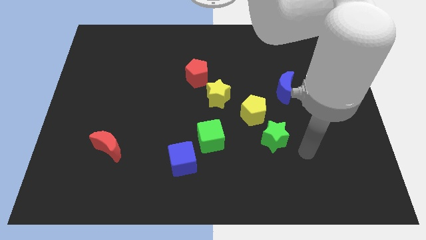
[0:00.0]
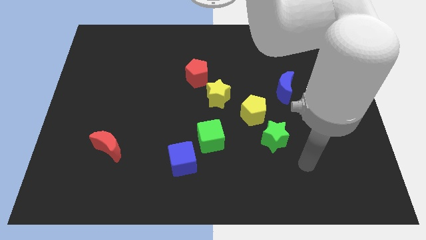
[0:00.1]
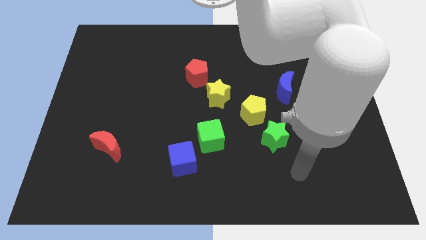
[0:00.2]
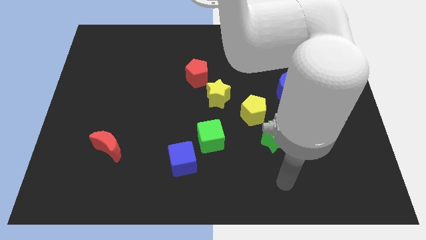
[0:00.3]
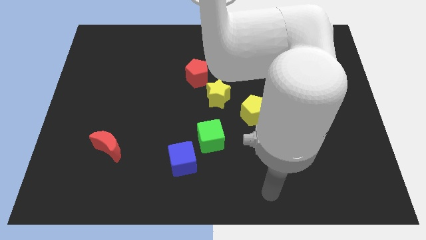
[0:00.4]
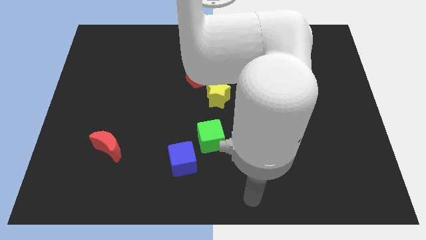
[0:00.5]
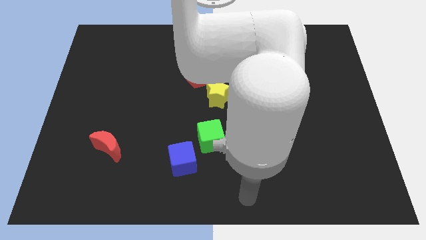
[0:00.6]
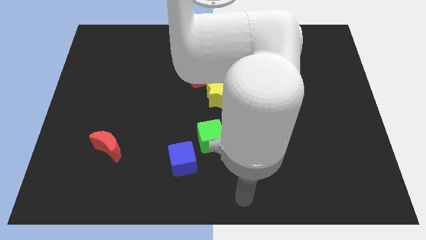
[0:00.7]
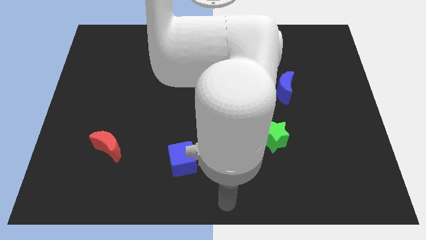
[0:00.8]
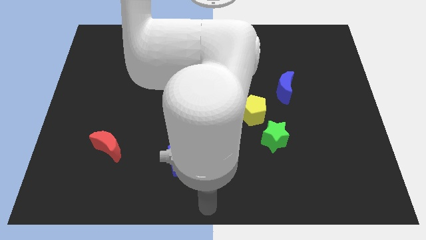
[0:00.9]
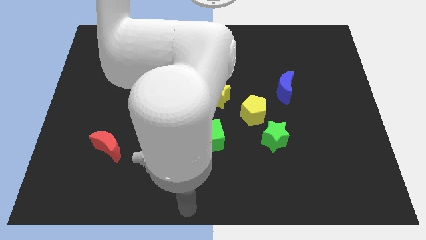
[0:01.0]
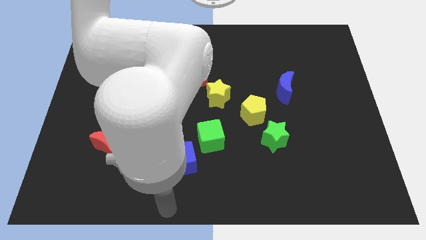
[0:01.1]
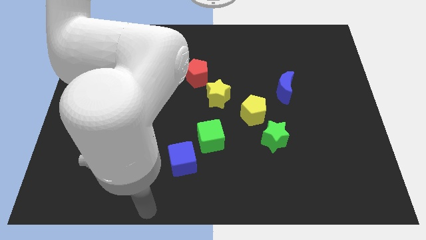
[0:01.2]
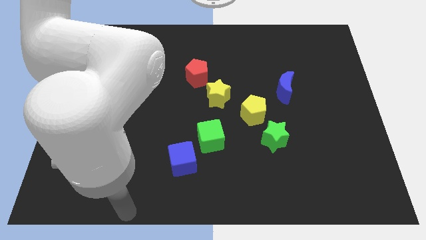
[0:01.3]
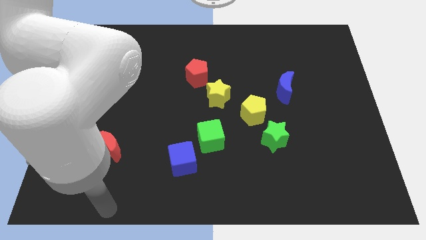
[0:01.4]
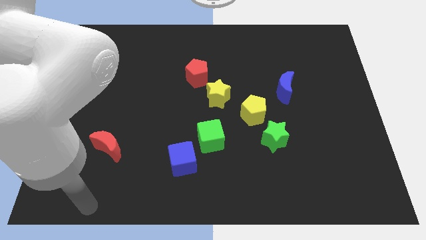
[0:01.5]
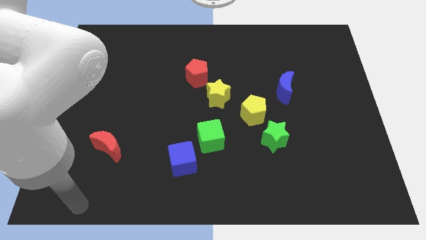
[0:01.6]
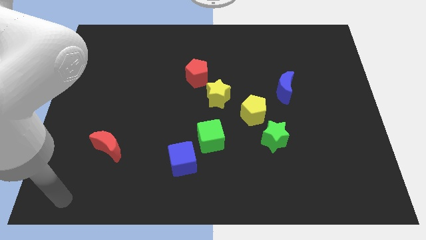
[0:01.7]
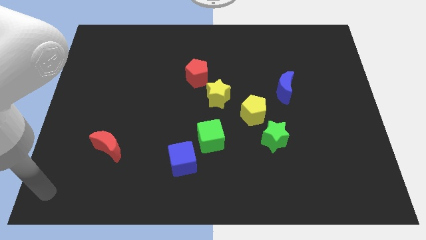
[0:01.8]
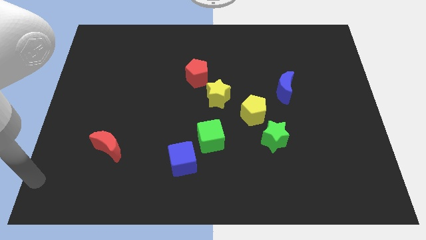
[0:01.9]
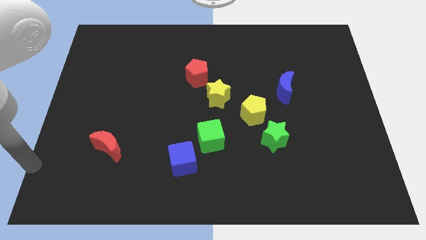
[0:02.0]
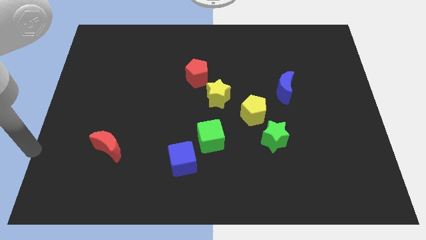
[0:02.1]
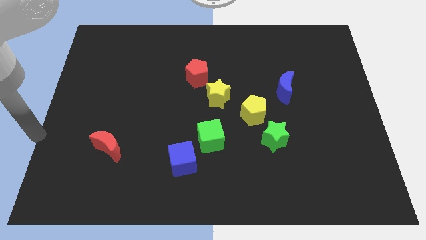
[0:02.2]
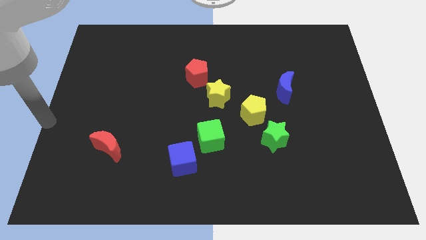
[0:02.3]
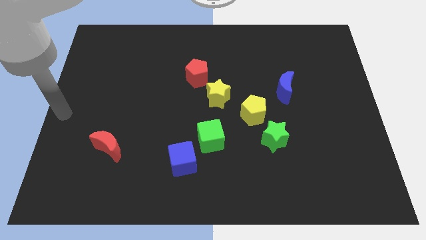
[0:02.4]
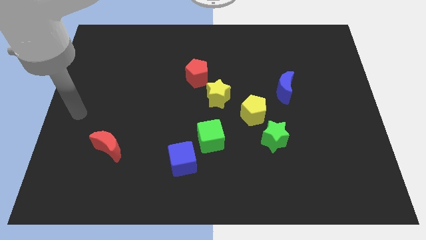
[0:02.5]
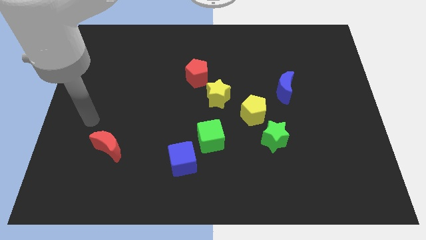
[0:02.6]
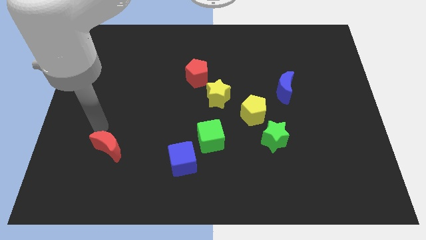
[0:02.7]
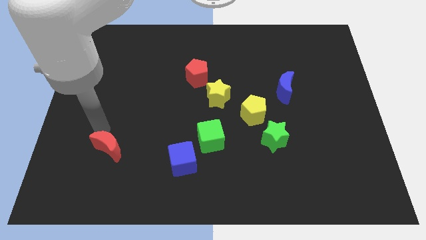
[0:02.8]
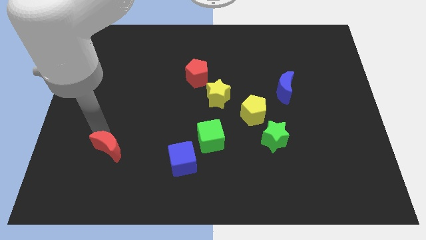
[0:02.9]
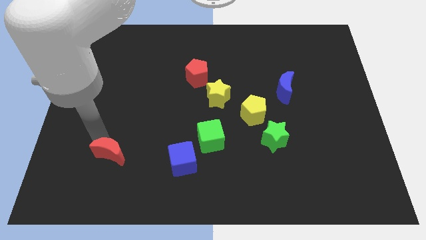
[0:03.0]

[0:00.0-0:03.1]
move arm to the top of red crescent

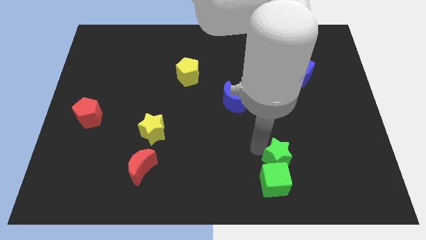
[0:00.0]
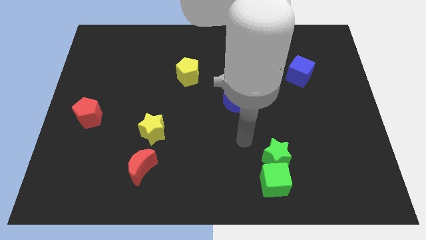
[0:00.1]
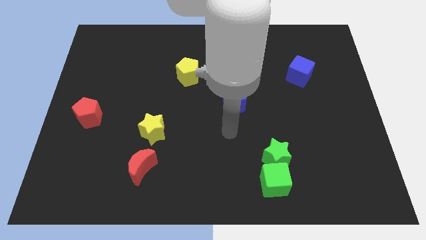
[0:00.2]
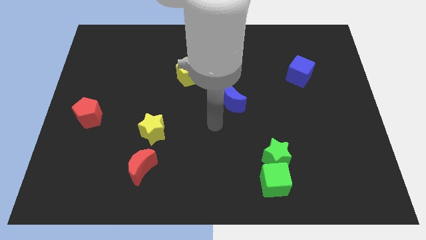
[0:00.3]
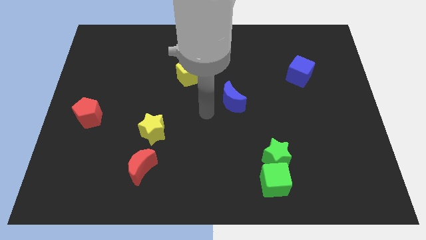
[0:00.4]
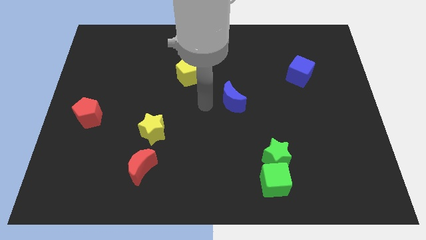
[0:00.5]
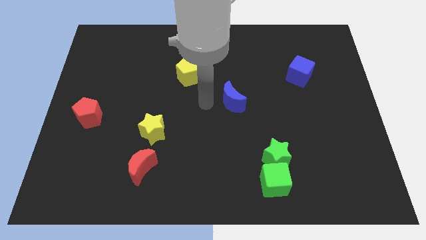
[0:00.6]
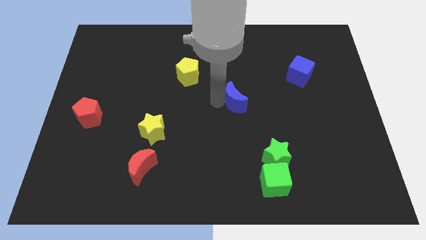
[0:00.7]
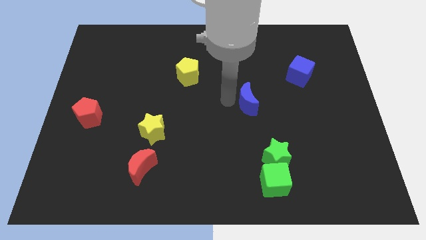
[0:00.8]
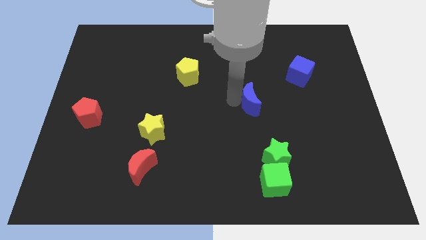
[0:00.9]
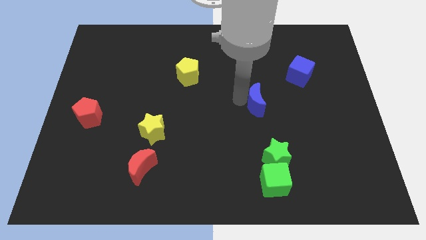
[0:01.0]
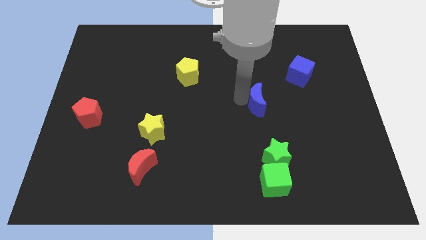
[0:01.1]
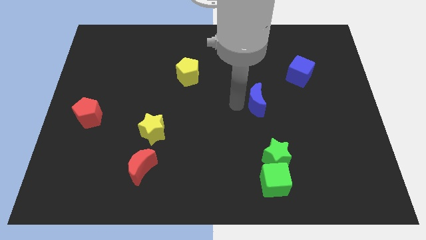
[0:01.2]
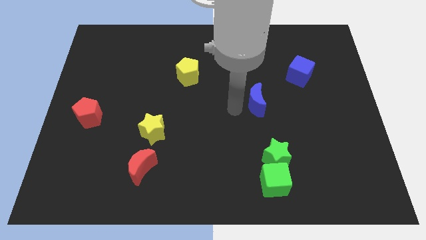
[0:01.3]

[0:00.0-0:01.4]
place blue moon to the top of the green star

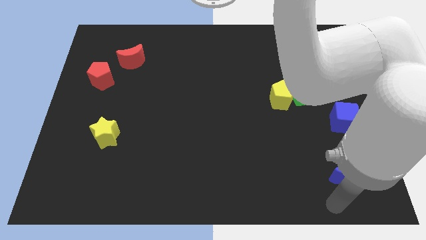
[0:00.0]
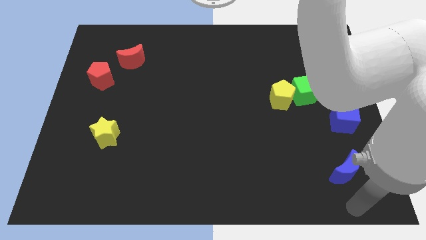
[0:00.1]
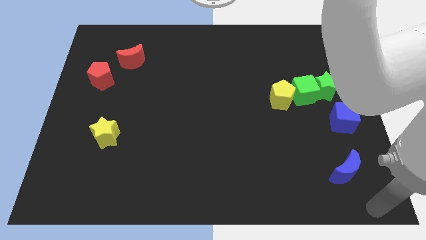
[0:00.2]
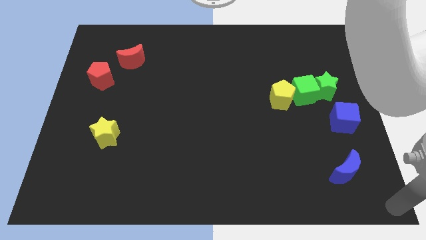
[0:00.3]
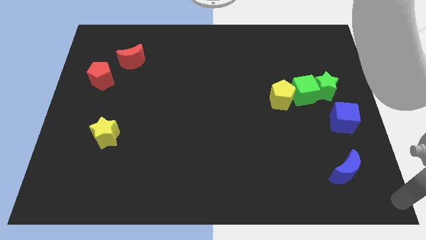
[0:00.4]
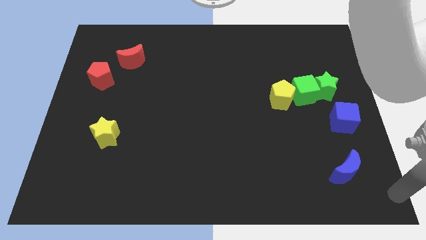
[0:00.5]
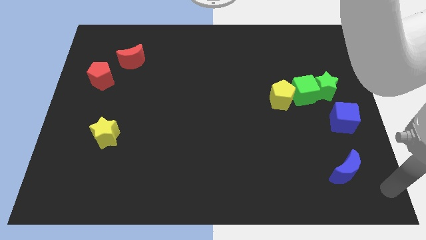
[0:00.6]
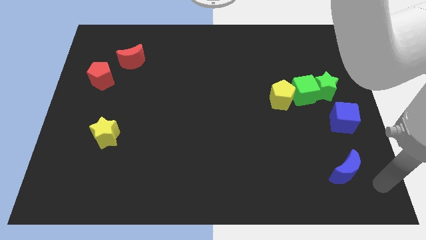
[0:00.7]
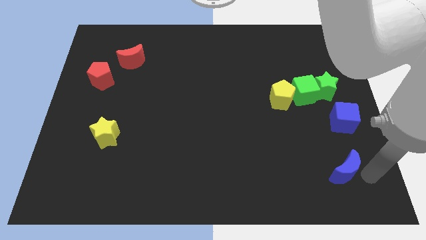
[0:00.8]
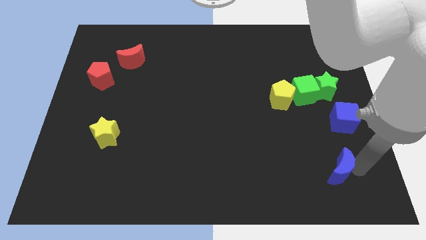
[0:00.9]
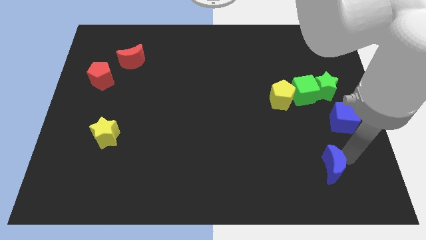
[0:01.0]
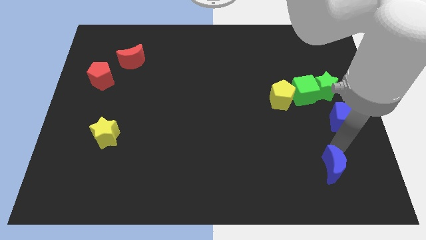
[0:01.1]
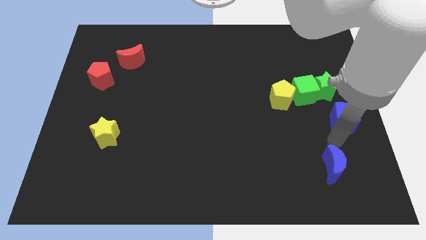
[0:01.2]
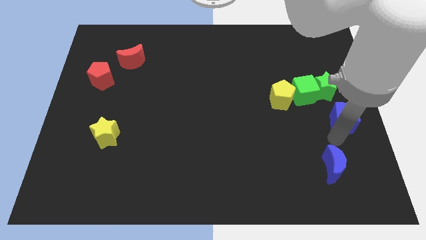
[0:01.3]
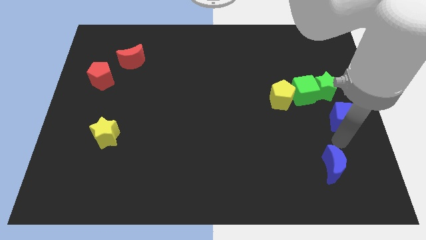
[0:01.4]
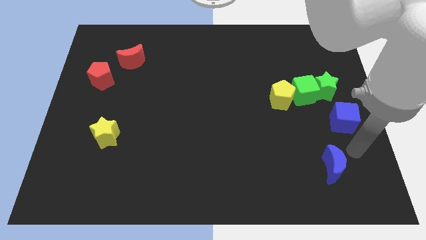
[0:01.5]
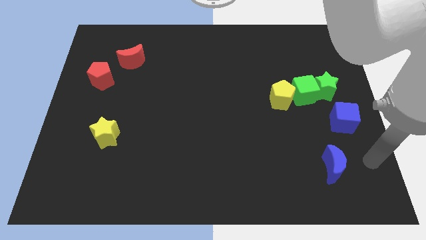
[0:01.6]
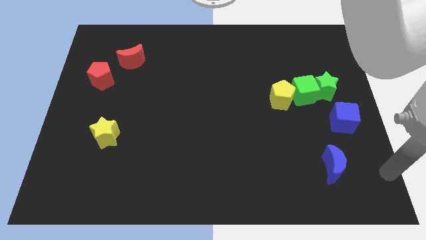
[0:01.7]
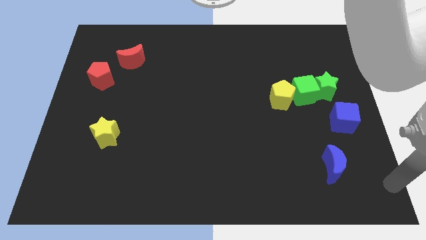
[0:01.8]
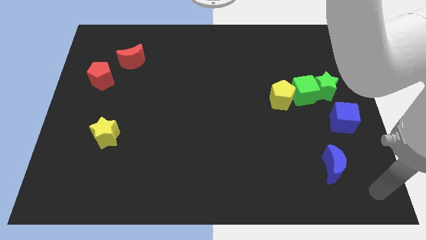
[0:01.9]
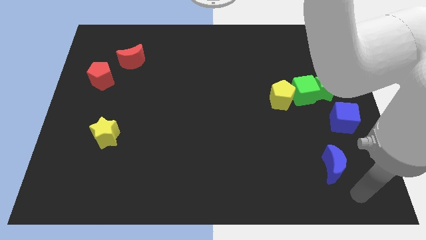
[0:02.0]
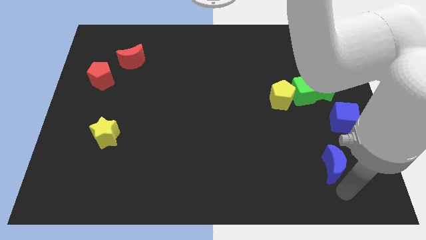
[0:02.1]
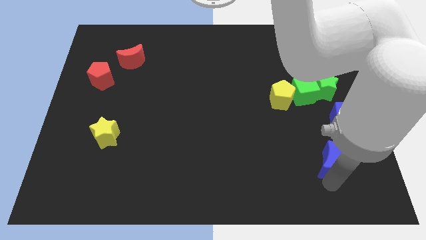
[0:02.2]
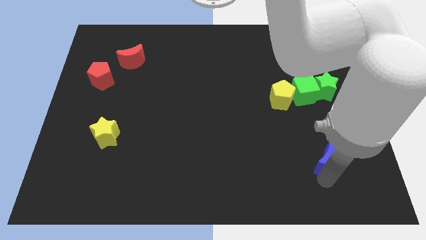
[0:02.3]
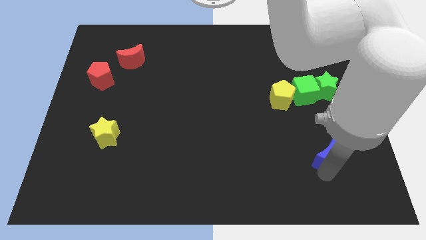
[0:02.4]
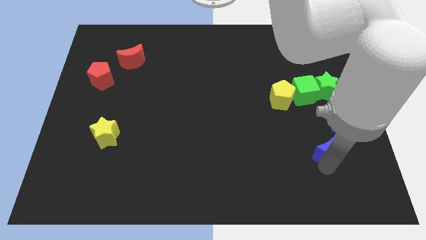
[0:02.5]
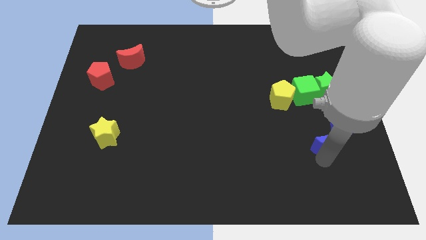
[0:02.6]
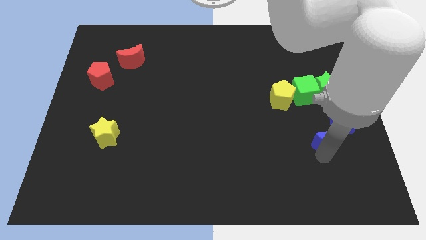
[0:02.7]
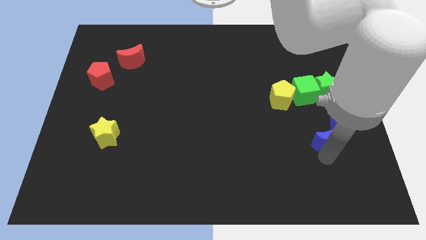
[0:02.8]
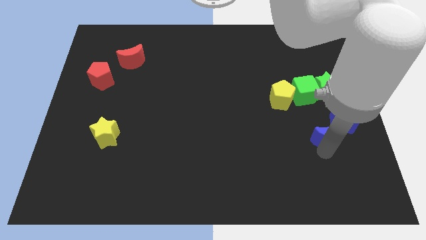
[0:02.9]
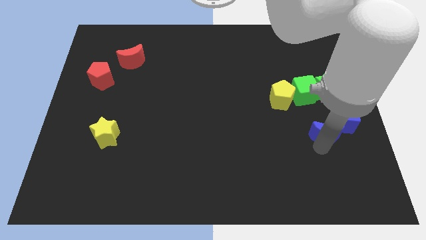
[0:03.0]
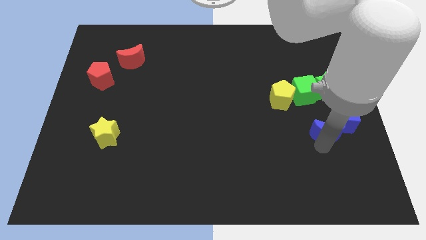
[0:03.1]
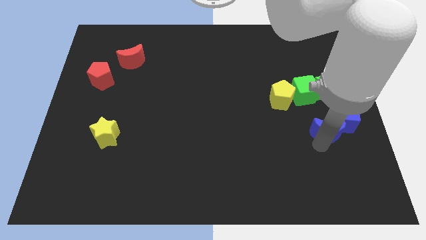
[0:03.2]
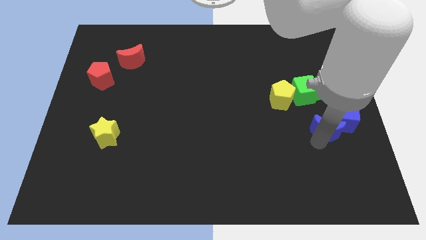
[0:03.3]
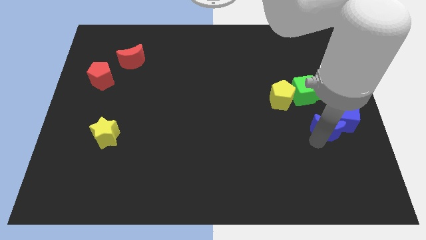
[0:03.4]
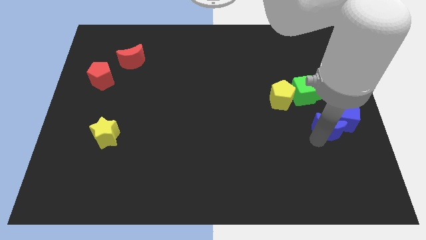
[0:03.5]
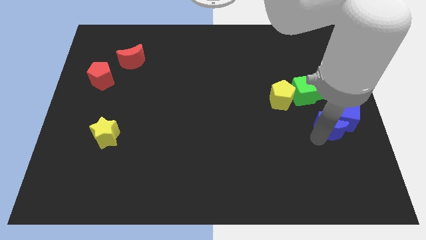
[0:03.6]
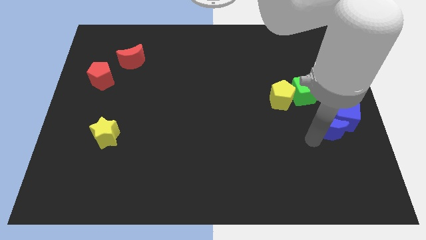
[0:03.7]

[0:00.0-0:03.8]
place the blue moon below the blue cube

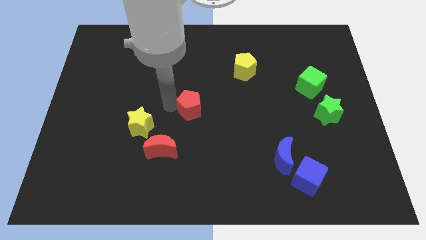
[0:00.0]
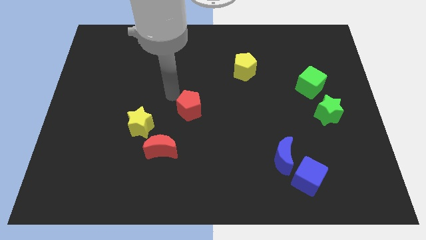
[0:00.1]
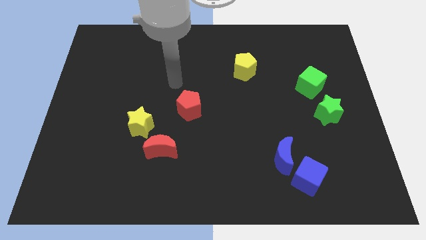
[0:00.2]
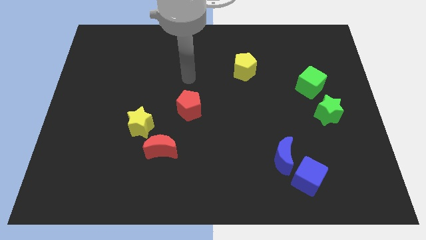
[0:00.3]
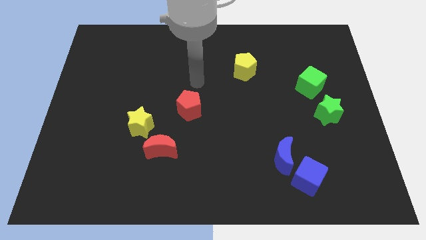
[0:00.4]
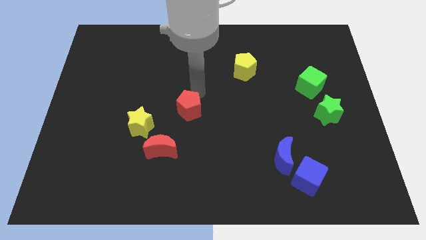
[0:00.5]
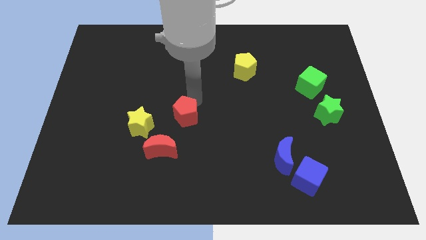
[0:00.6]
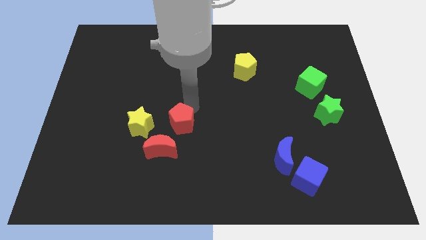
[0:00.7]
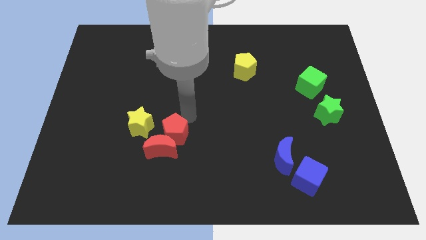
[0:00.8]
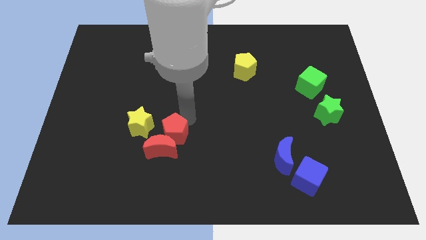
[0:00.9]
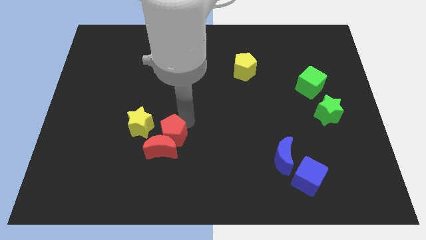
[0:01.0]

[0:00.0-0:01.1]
slide the red pentagon into the red moon
